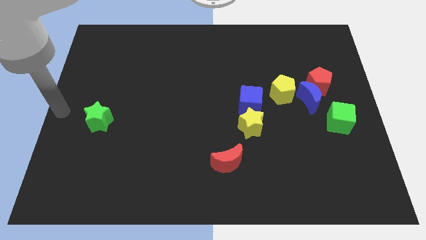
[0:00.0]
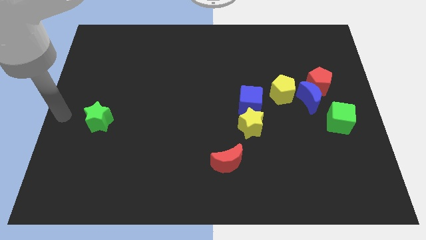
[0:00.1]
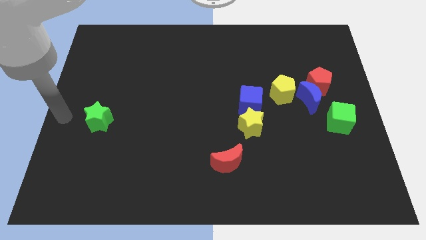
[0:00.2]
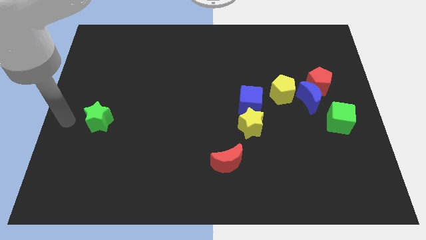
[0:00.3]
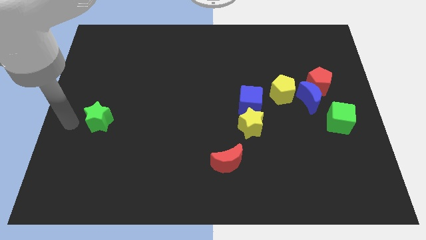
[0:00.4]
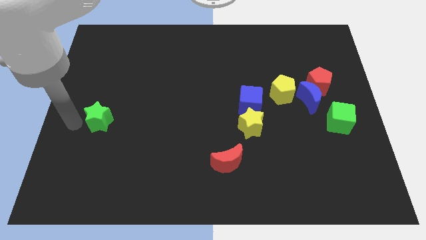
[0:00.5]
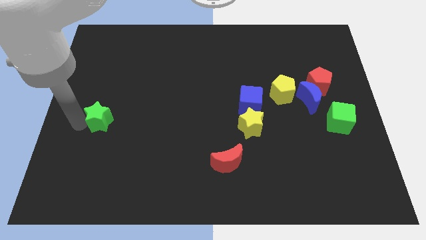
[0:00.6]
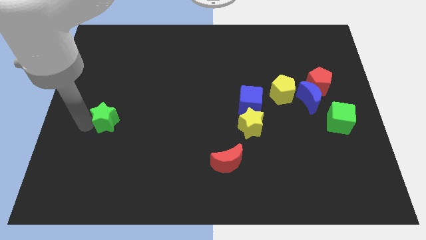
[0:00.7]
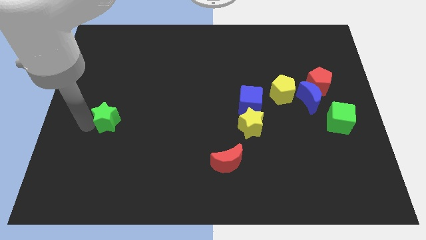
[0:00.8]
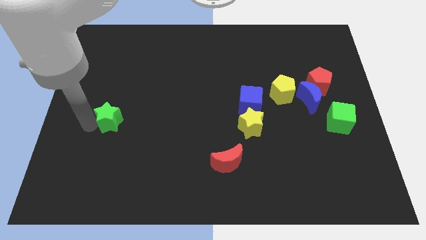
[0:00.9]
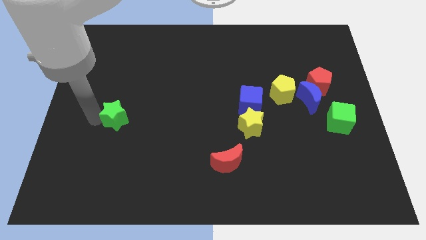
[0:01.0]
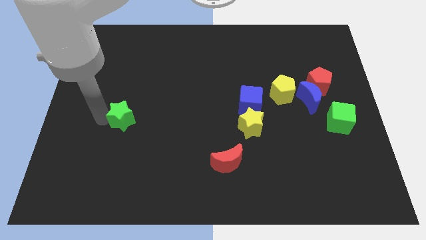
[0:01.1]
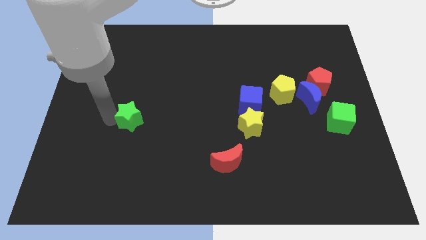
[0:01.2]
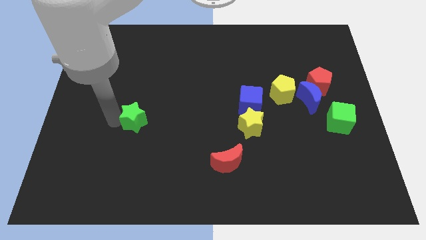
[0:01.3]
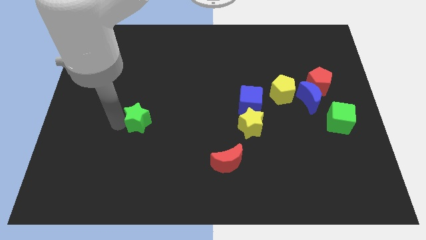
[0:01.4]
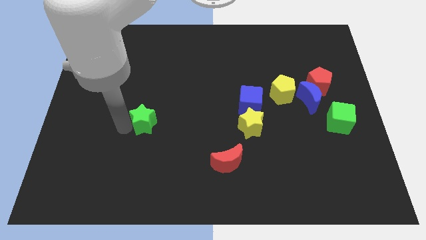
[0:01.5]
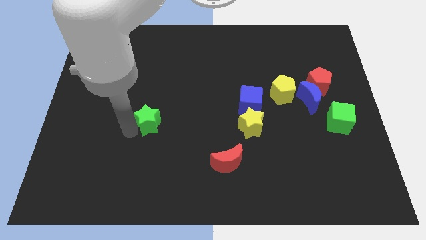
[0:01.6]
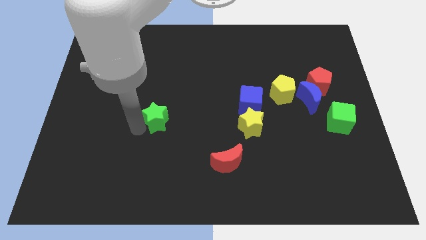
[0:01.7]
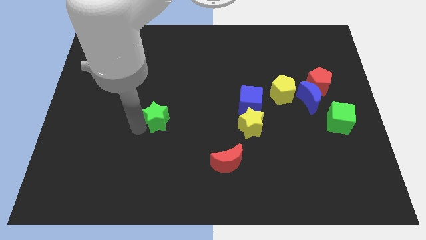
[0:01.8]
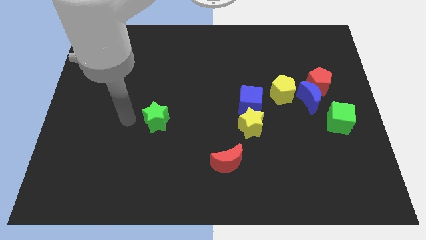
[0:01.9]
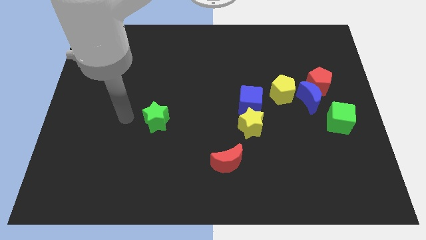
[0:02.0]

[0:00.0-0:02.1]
push green star towards center

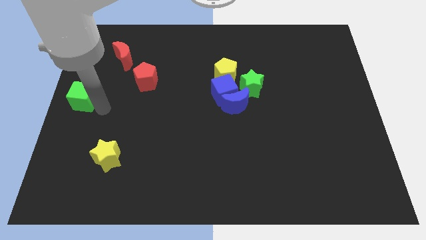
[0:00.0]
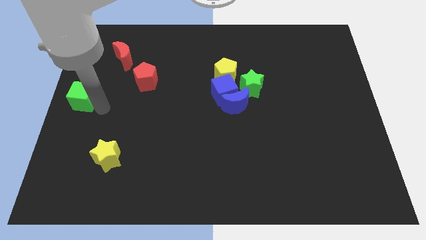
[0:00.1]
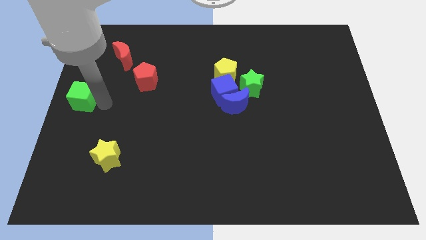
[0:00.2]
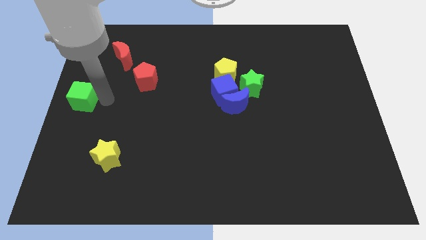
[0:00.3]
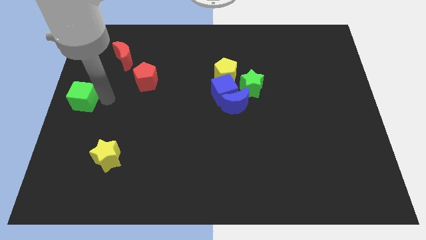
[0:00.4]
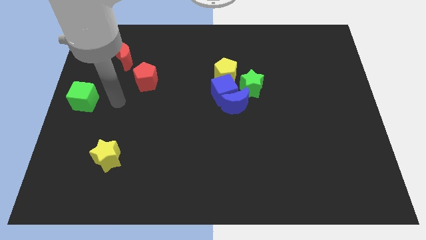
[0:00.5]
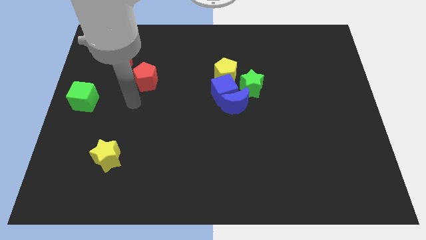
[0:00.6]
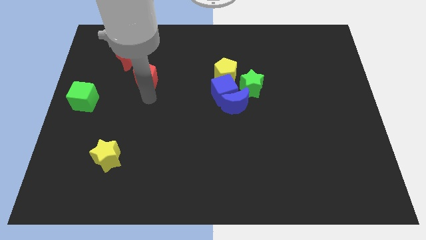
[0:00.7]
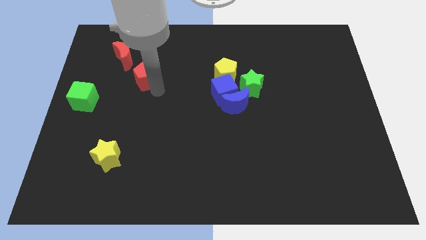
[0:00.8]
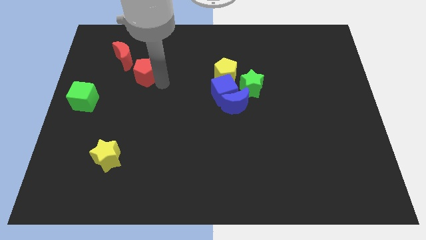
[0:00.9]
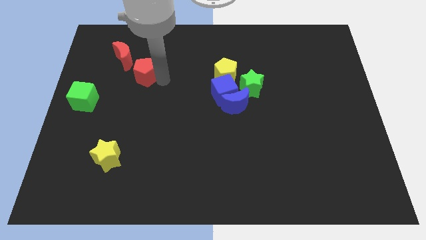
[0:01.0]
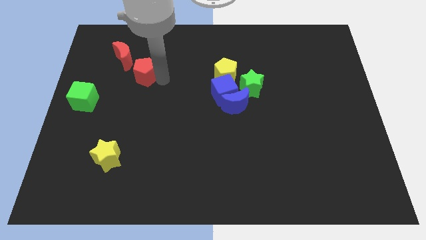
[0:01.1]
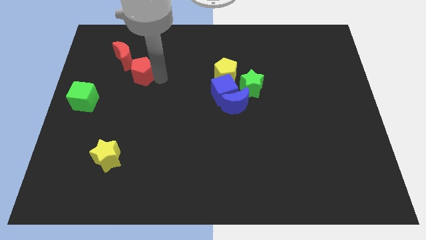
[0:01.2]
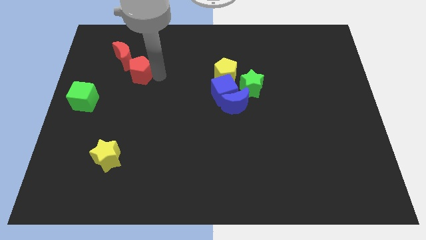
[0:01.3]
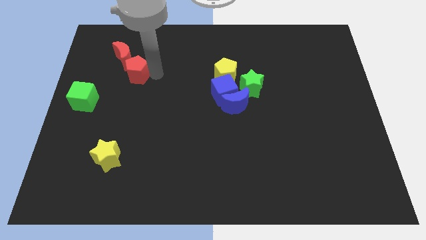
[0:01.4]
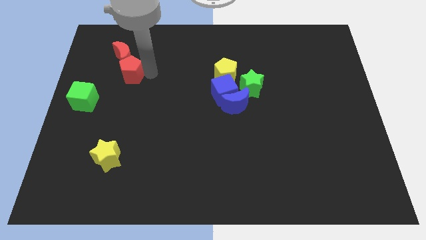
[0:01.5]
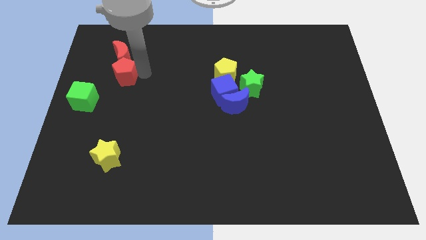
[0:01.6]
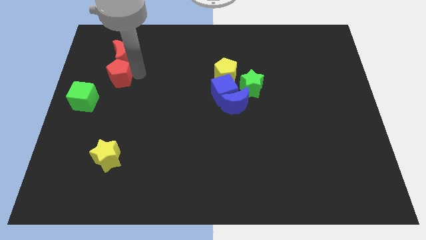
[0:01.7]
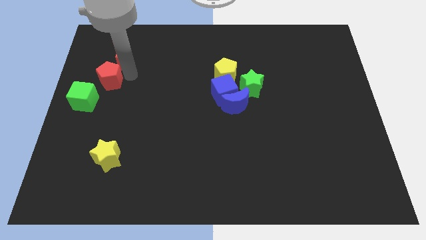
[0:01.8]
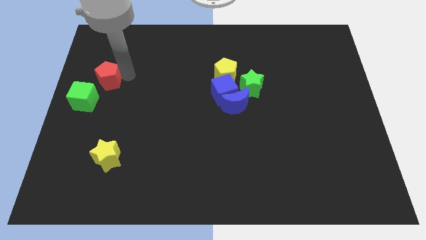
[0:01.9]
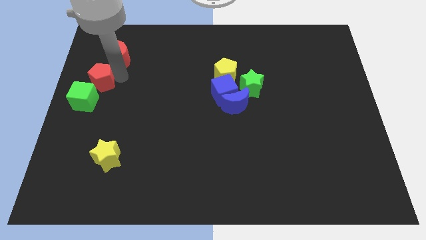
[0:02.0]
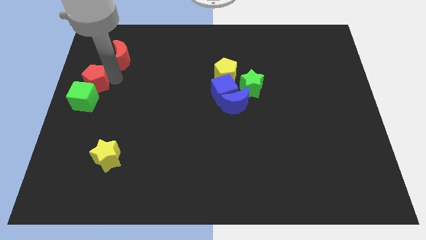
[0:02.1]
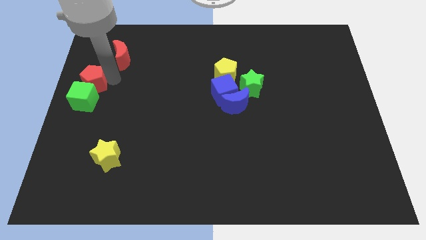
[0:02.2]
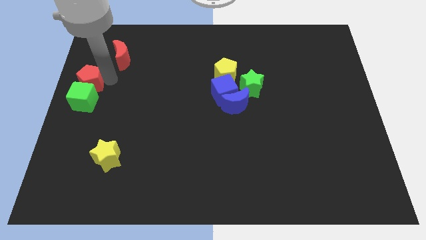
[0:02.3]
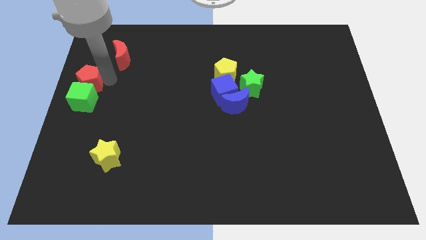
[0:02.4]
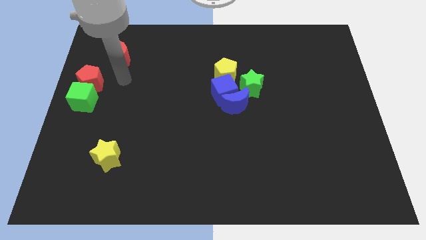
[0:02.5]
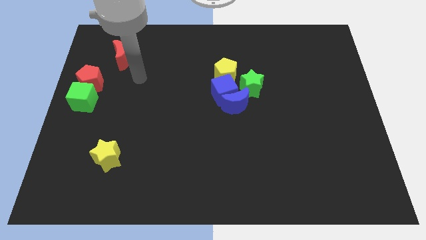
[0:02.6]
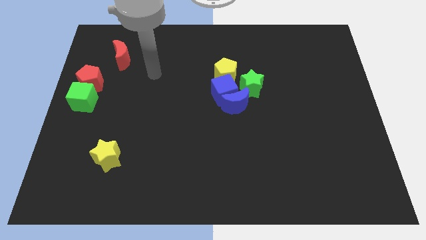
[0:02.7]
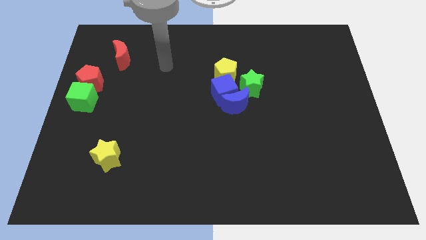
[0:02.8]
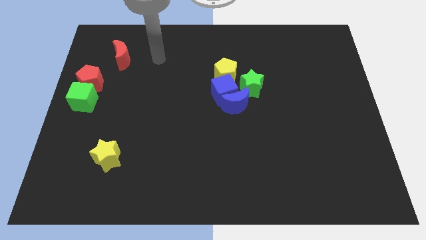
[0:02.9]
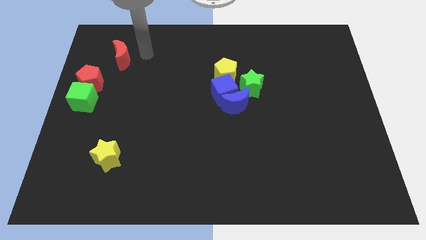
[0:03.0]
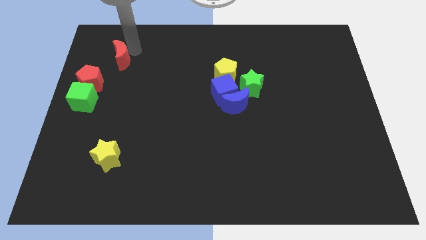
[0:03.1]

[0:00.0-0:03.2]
push the red pentagon to the top side of the green cube

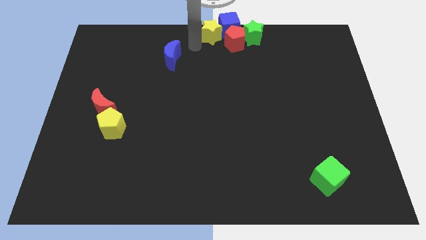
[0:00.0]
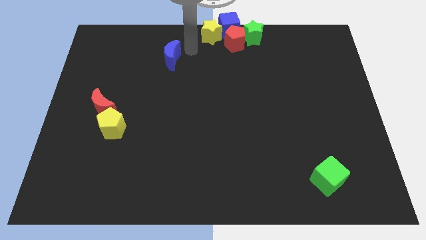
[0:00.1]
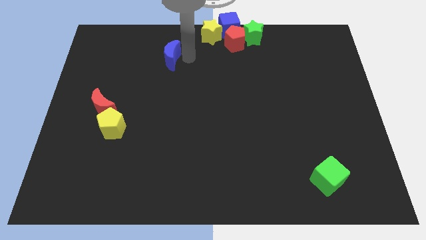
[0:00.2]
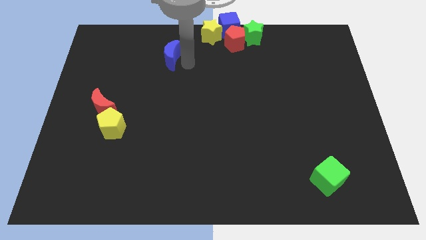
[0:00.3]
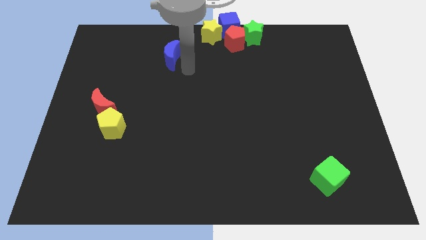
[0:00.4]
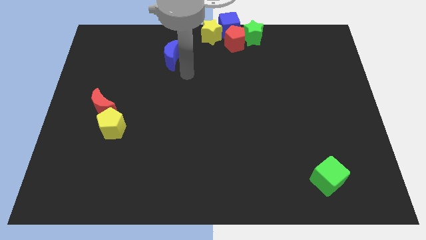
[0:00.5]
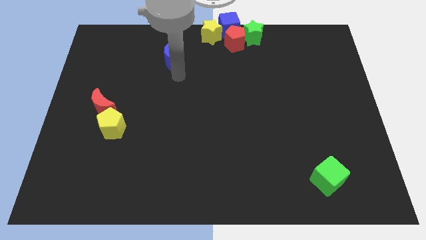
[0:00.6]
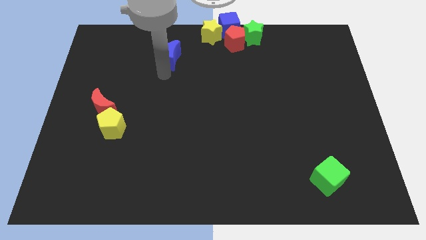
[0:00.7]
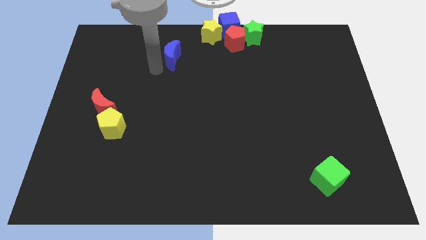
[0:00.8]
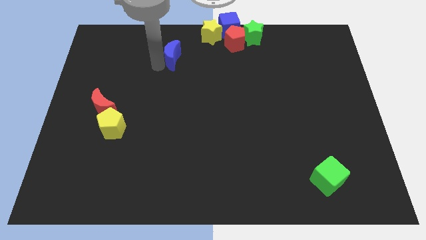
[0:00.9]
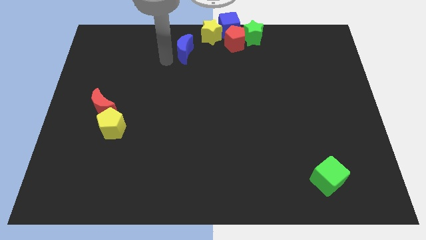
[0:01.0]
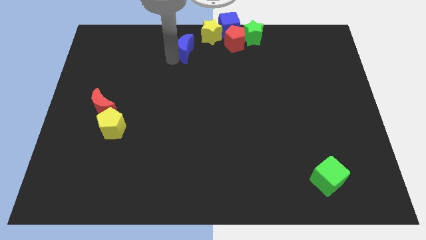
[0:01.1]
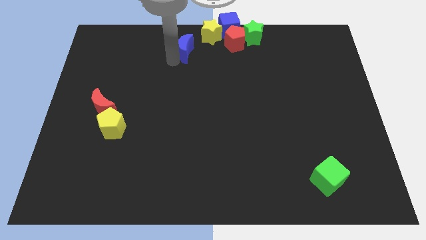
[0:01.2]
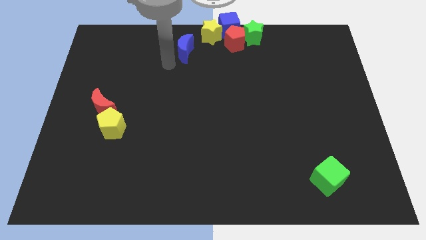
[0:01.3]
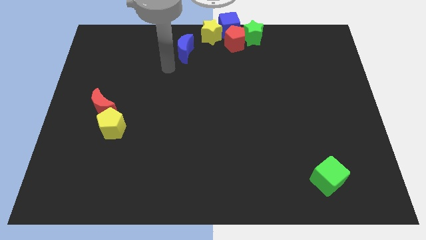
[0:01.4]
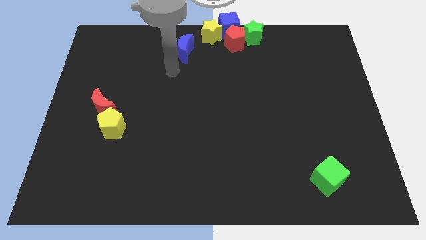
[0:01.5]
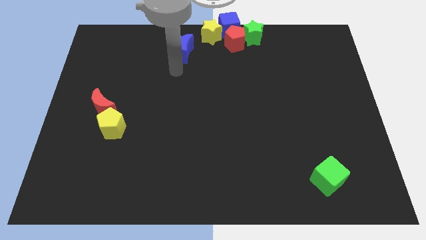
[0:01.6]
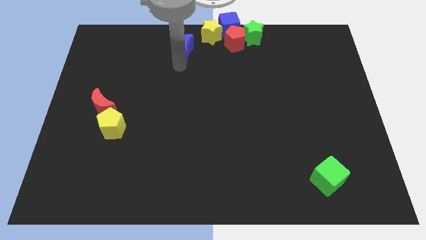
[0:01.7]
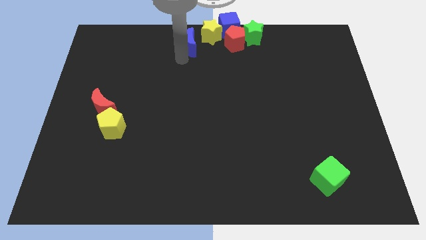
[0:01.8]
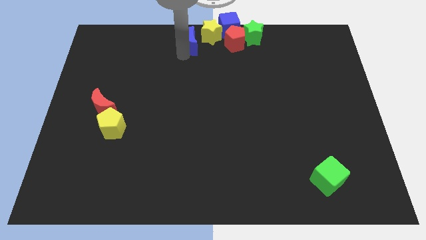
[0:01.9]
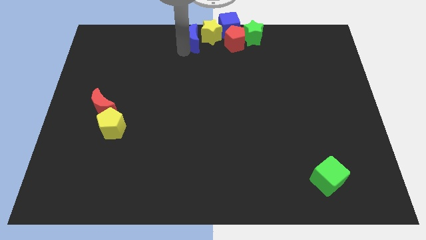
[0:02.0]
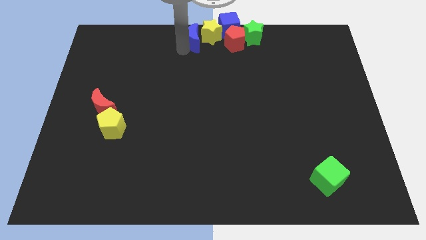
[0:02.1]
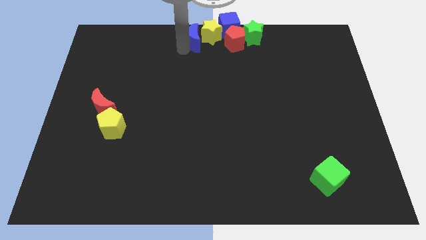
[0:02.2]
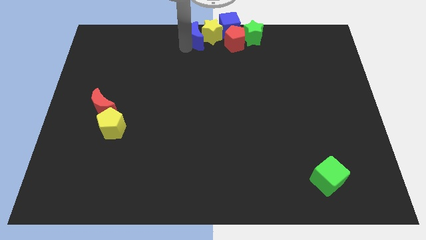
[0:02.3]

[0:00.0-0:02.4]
move the blue crescent to the left of the yellow star

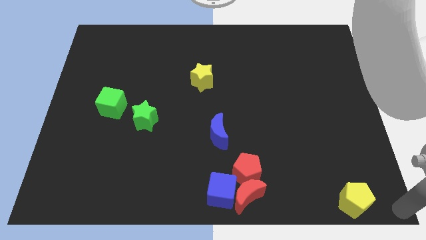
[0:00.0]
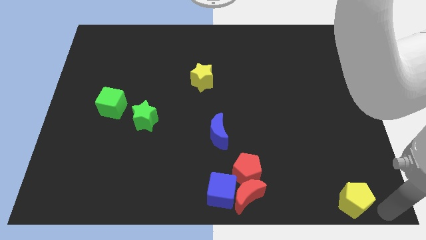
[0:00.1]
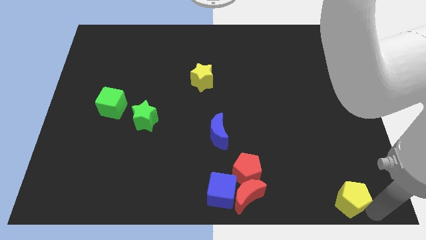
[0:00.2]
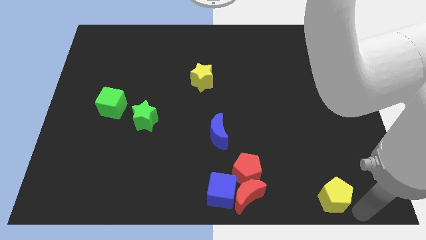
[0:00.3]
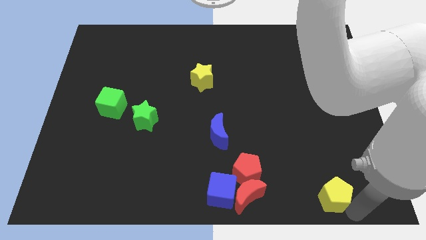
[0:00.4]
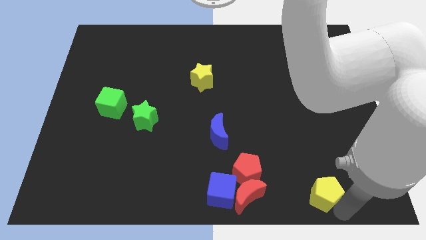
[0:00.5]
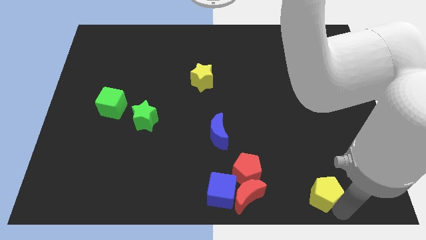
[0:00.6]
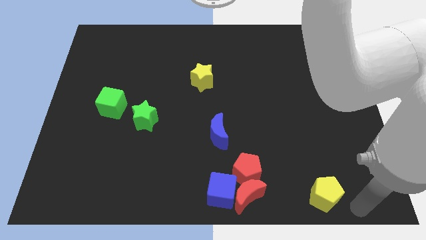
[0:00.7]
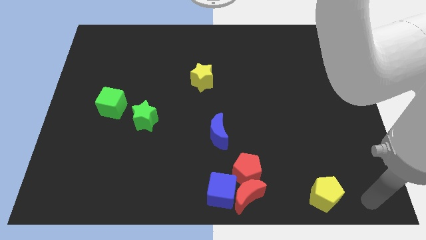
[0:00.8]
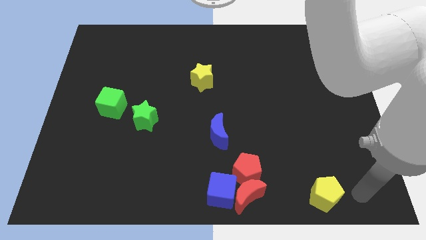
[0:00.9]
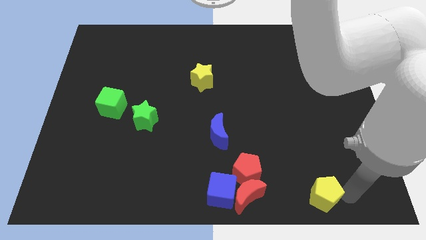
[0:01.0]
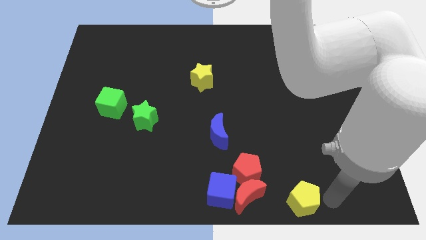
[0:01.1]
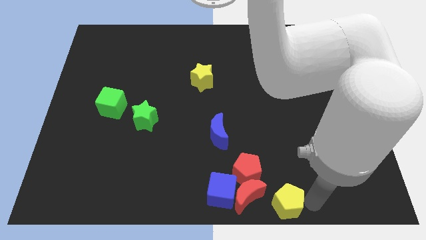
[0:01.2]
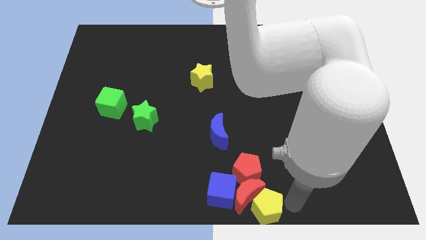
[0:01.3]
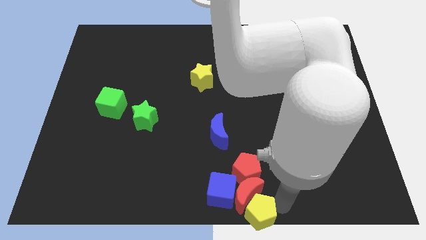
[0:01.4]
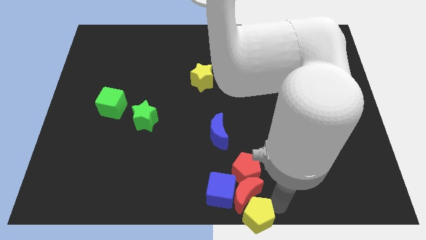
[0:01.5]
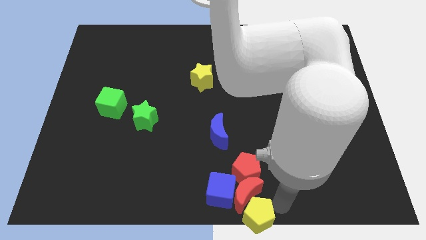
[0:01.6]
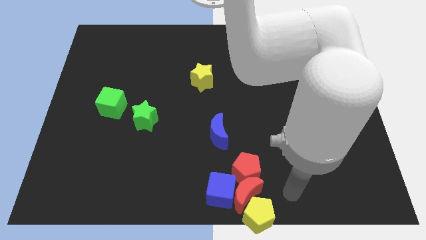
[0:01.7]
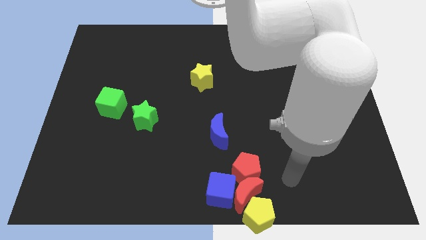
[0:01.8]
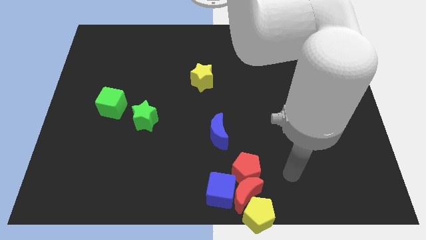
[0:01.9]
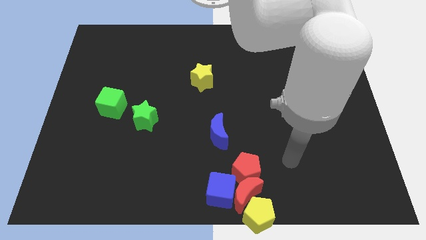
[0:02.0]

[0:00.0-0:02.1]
push yellow pentagon into red moon
